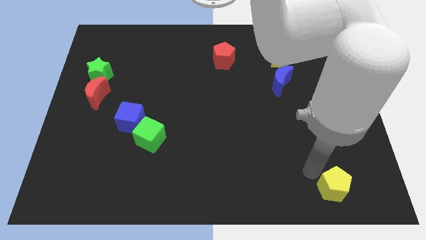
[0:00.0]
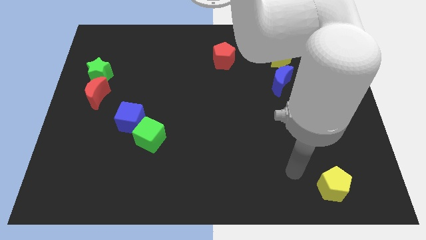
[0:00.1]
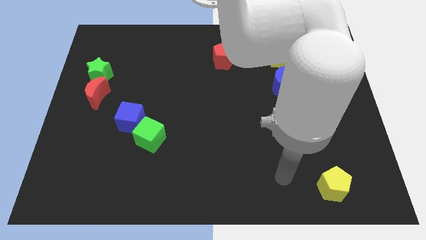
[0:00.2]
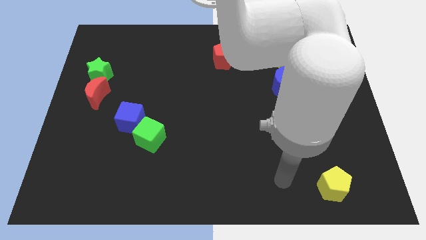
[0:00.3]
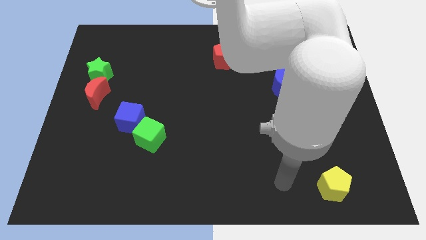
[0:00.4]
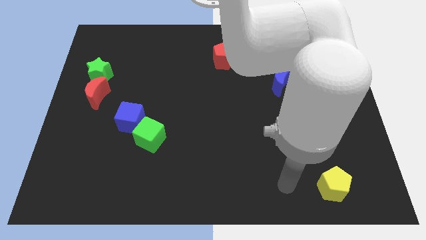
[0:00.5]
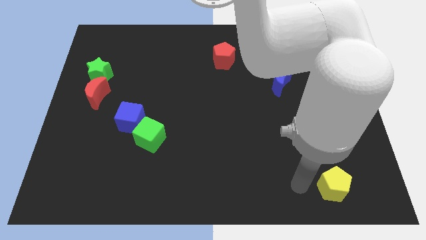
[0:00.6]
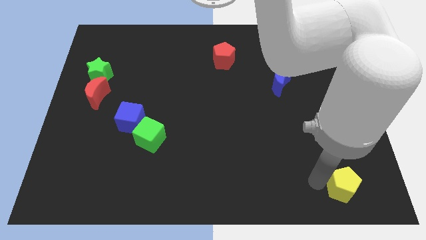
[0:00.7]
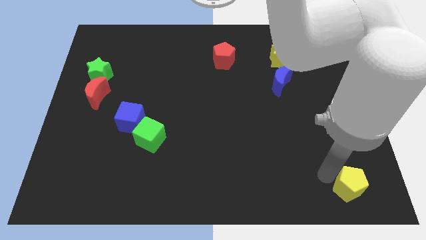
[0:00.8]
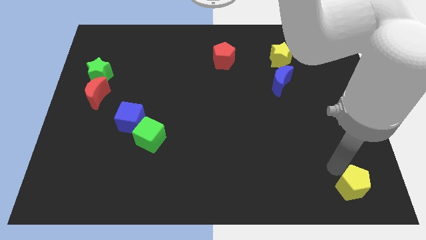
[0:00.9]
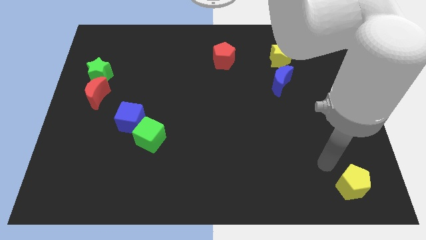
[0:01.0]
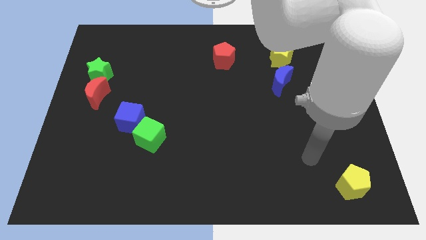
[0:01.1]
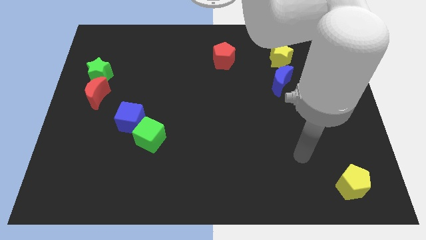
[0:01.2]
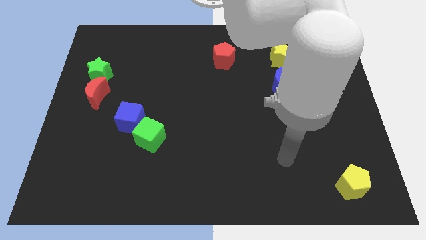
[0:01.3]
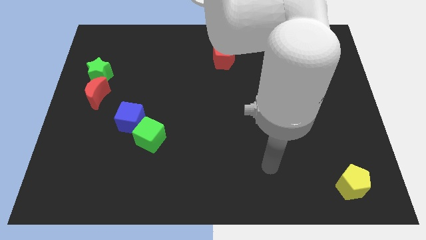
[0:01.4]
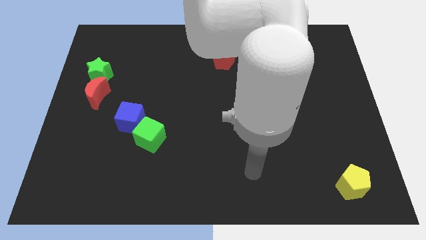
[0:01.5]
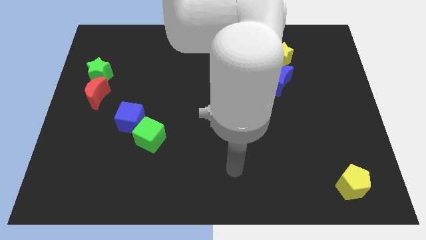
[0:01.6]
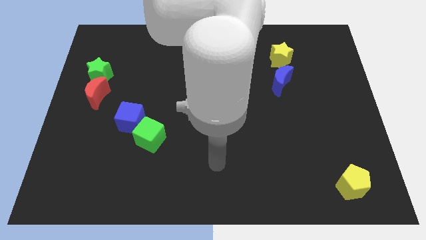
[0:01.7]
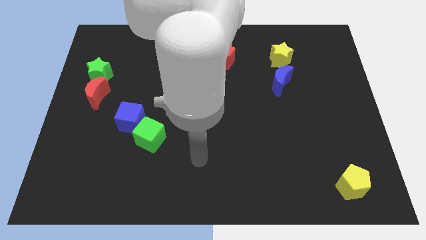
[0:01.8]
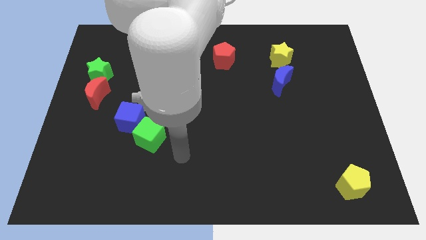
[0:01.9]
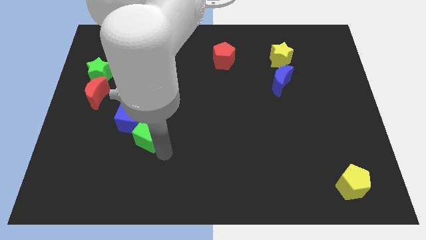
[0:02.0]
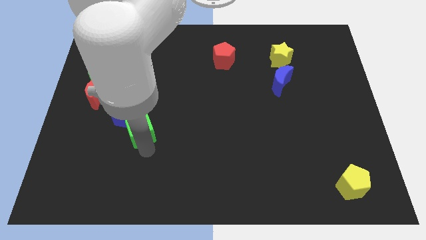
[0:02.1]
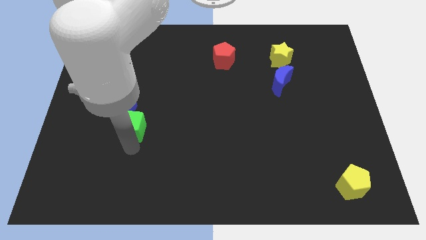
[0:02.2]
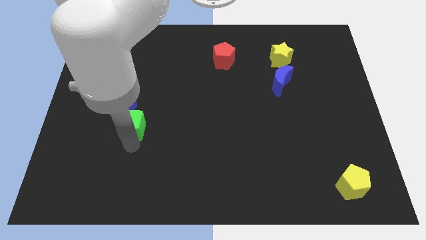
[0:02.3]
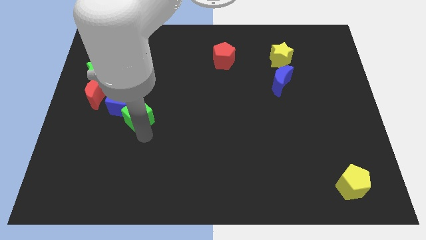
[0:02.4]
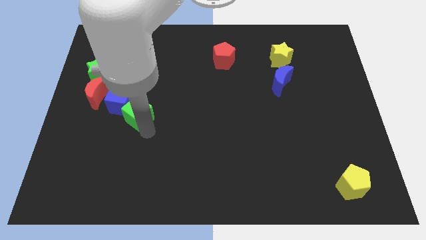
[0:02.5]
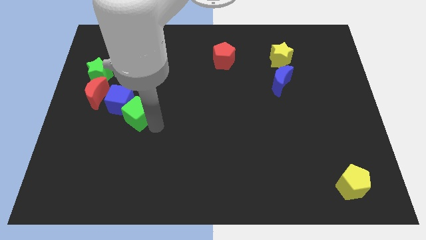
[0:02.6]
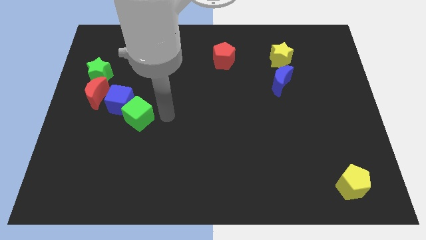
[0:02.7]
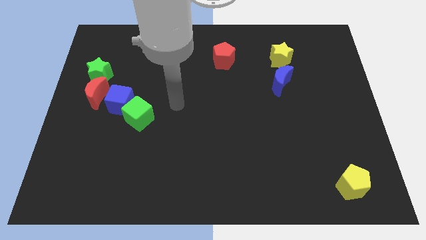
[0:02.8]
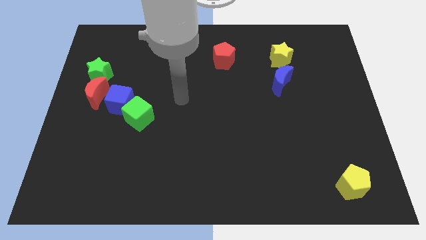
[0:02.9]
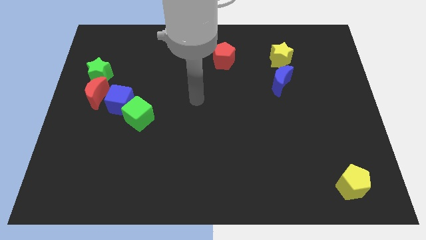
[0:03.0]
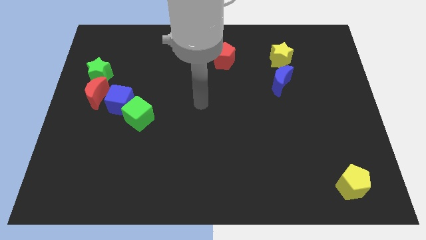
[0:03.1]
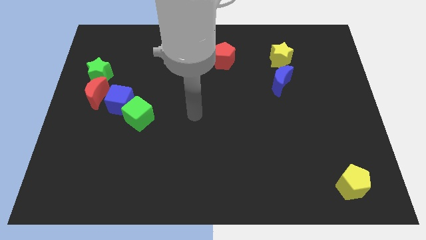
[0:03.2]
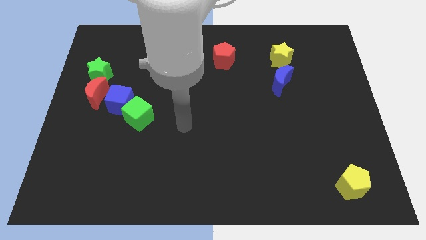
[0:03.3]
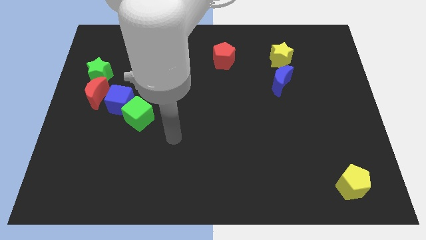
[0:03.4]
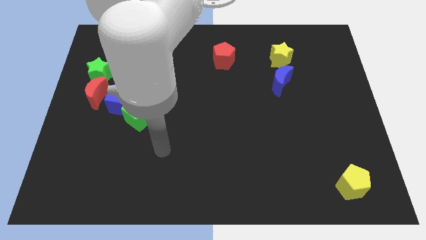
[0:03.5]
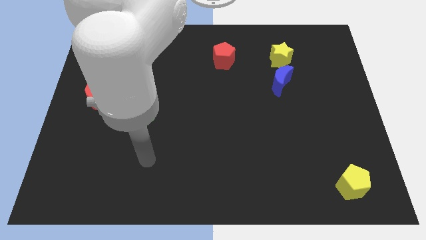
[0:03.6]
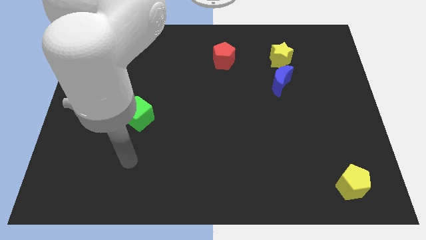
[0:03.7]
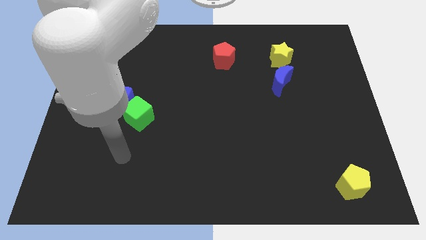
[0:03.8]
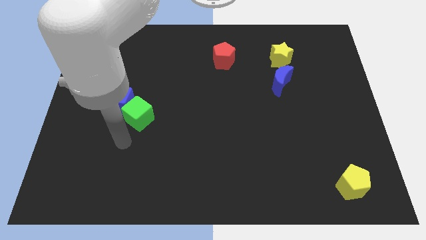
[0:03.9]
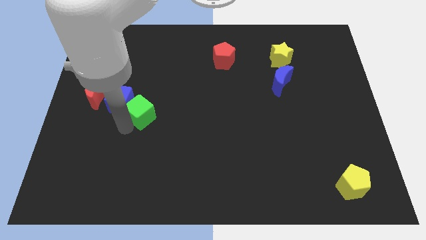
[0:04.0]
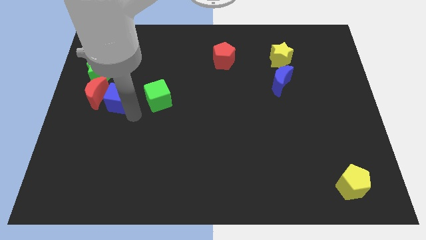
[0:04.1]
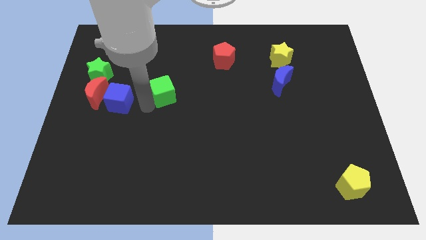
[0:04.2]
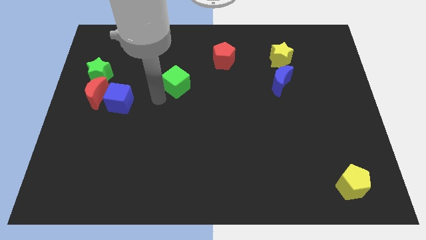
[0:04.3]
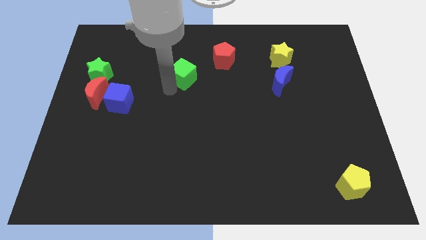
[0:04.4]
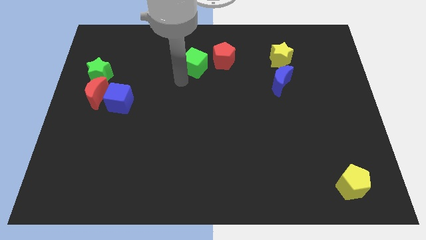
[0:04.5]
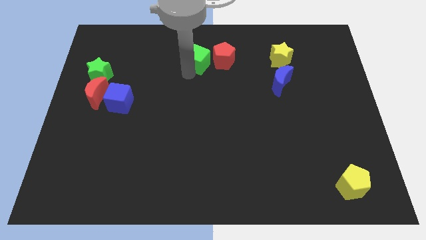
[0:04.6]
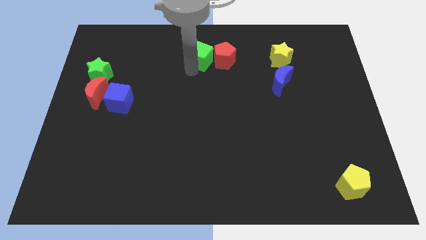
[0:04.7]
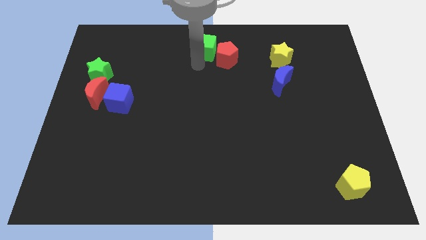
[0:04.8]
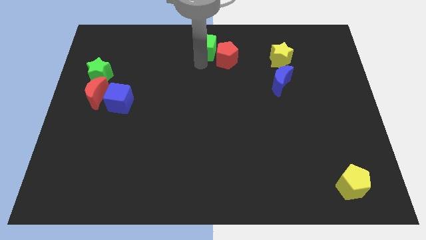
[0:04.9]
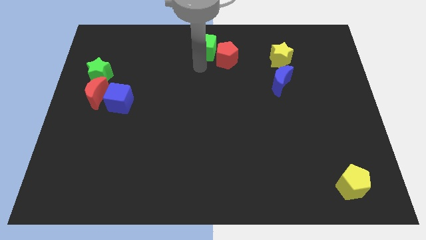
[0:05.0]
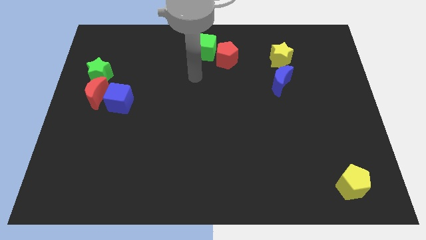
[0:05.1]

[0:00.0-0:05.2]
move the green cube to the top center of the board

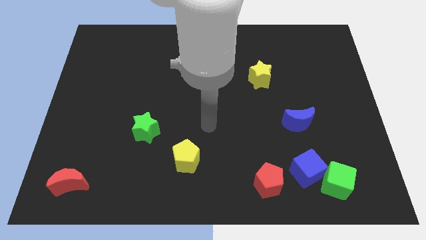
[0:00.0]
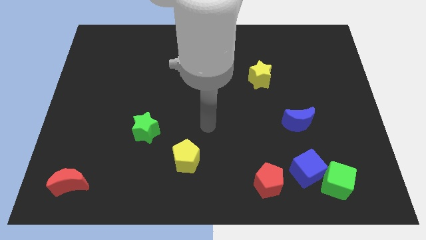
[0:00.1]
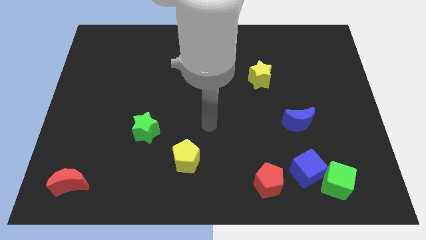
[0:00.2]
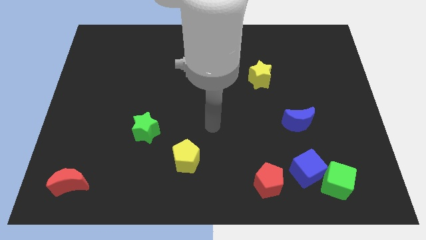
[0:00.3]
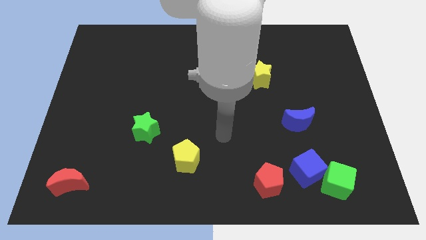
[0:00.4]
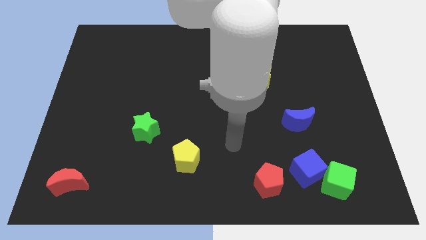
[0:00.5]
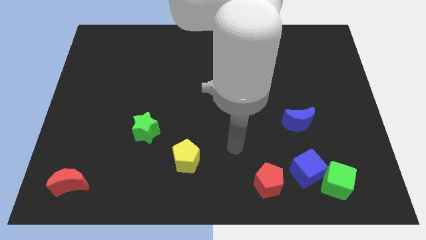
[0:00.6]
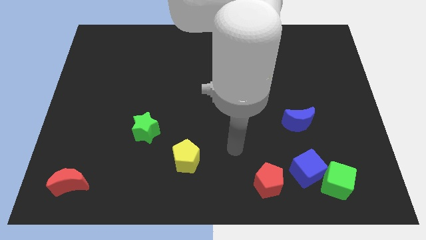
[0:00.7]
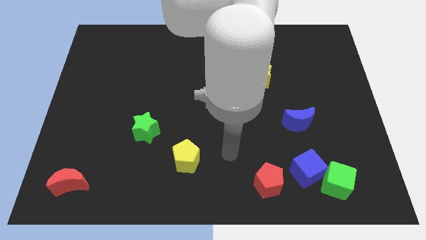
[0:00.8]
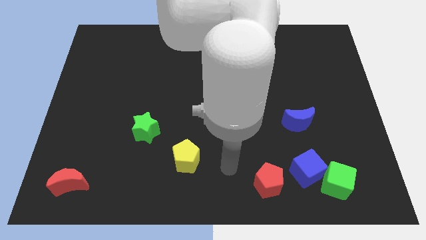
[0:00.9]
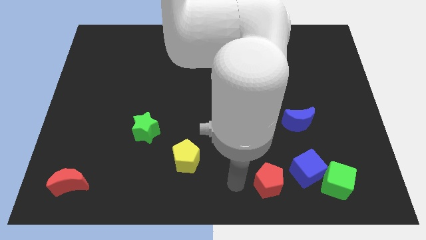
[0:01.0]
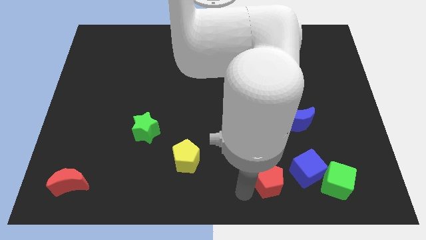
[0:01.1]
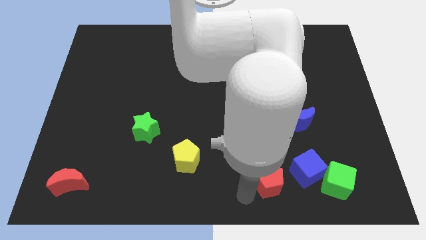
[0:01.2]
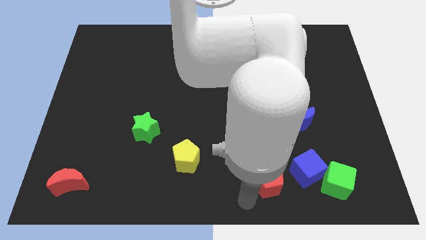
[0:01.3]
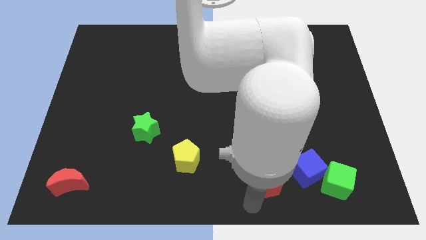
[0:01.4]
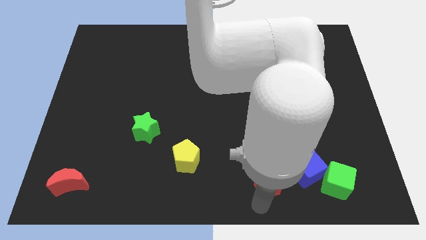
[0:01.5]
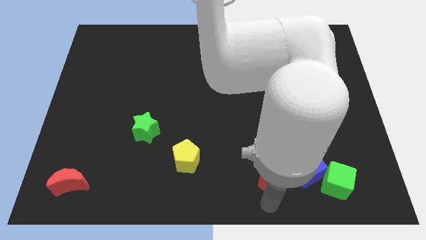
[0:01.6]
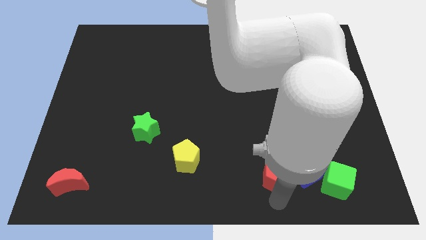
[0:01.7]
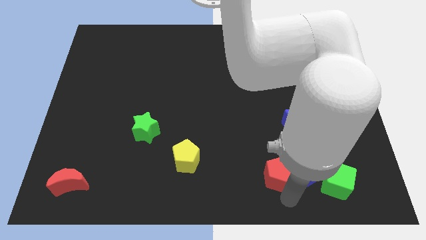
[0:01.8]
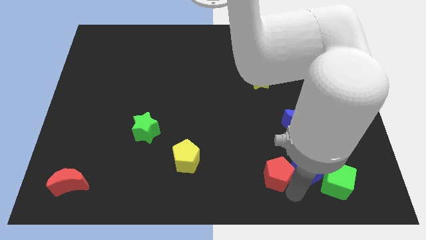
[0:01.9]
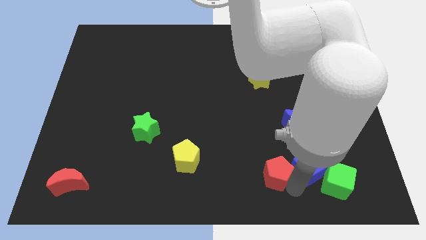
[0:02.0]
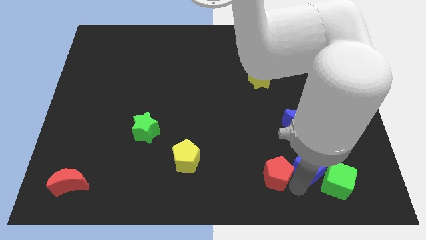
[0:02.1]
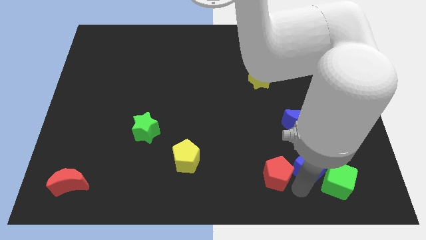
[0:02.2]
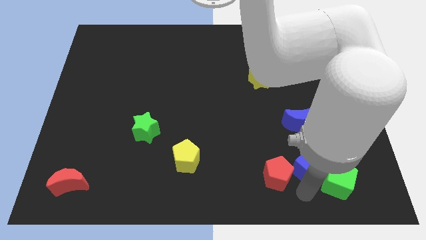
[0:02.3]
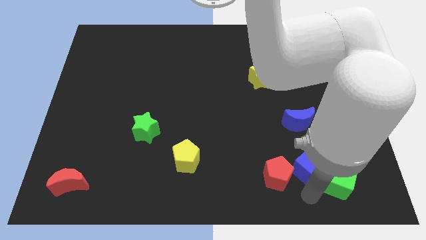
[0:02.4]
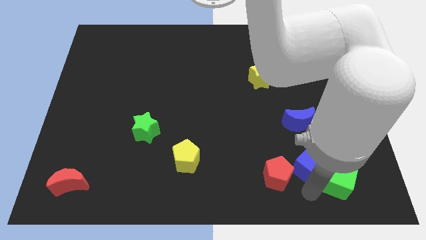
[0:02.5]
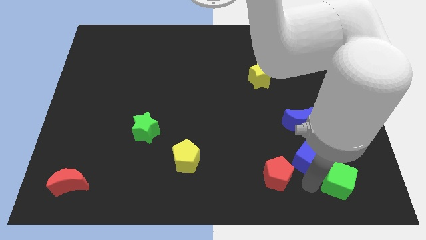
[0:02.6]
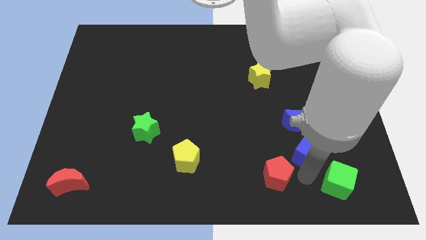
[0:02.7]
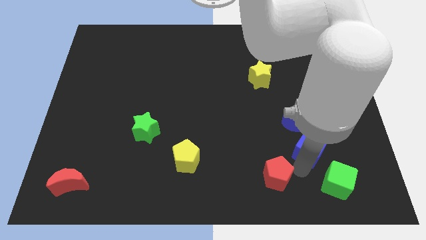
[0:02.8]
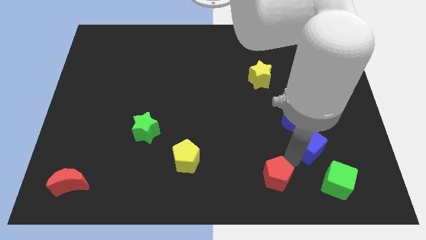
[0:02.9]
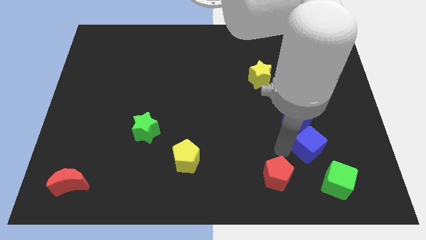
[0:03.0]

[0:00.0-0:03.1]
push the blue cube into the blue crescent

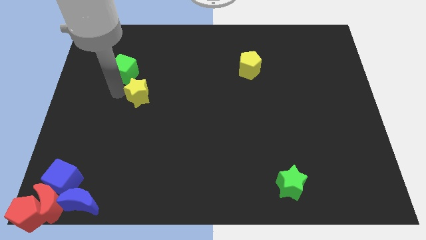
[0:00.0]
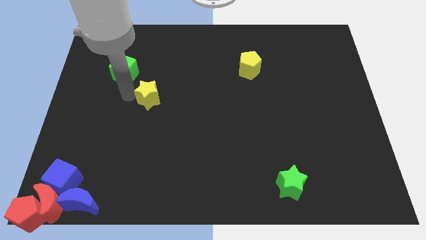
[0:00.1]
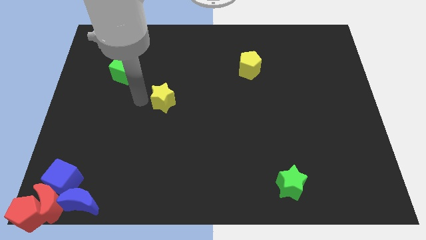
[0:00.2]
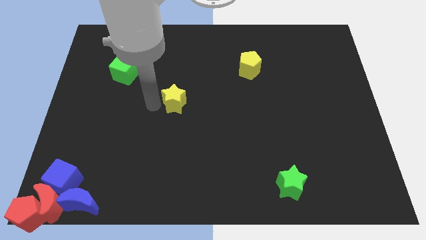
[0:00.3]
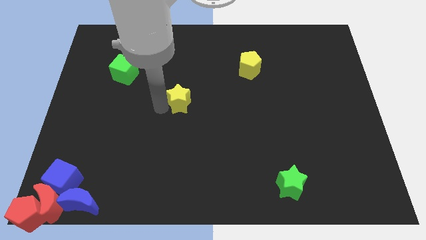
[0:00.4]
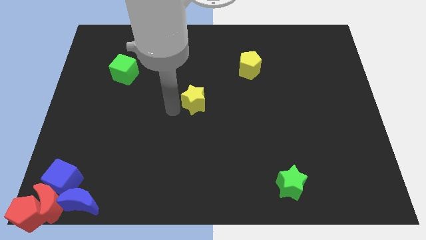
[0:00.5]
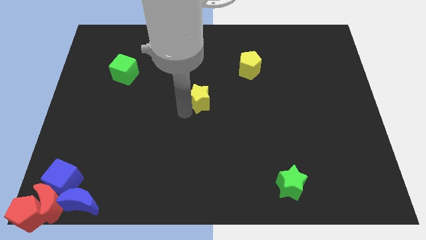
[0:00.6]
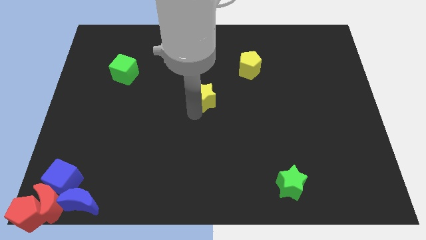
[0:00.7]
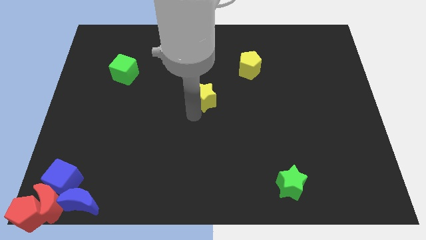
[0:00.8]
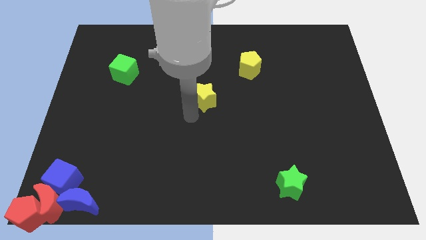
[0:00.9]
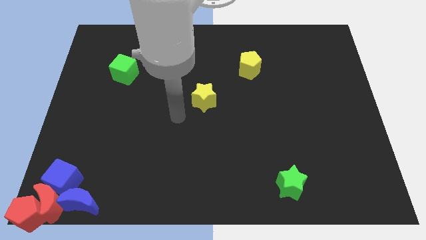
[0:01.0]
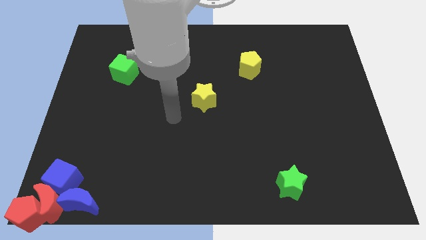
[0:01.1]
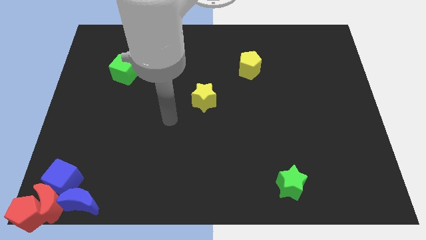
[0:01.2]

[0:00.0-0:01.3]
separate yellow star and the green cube
